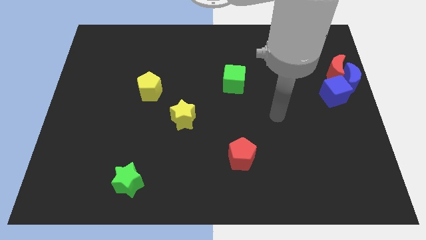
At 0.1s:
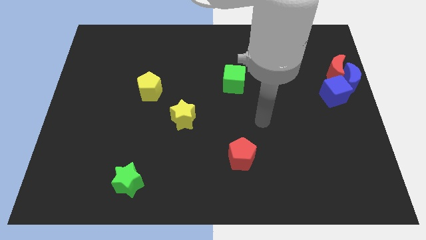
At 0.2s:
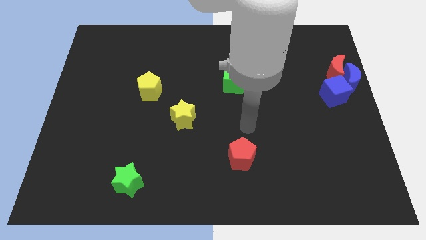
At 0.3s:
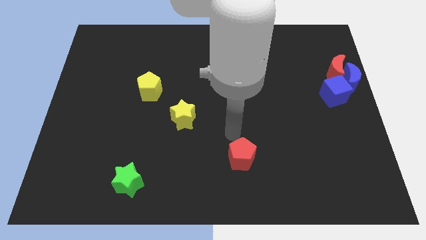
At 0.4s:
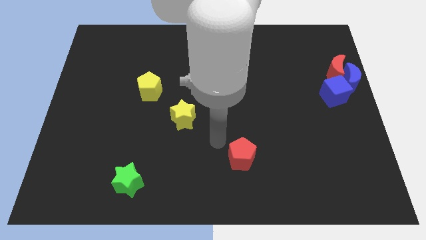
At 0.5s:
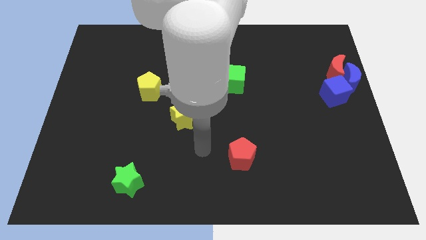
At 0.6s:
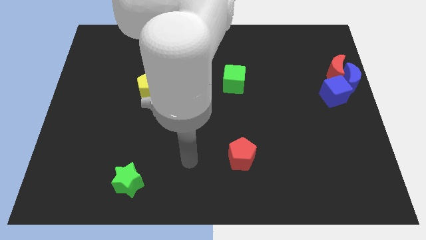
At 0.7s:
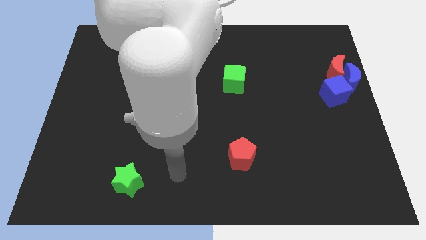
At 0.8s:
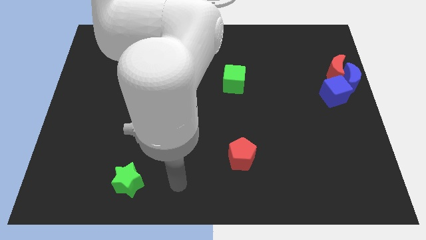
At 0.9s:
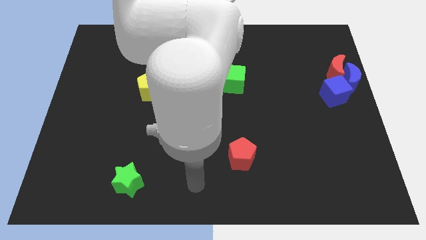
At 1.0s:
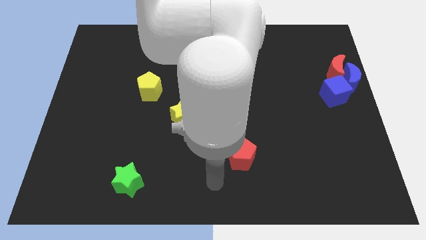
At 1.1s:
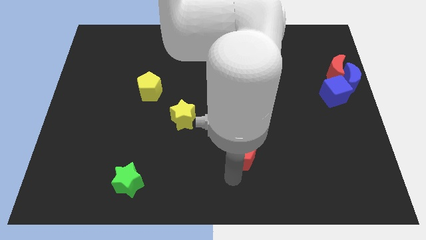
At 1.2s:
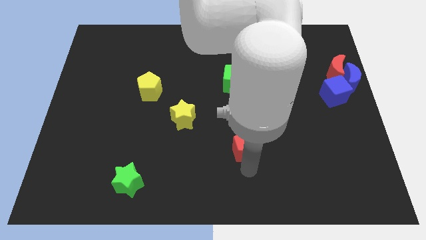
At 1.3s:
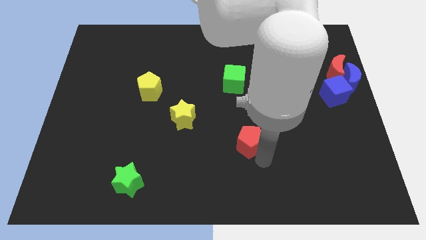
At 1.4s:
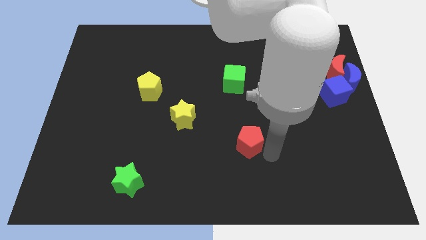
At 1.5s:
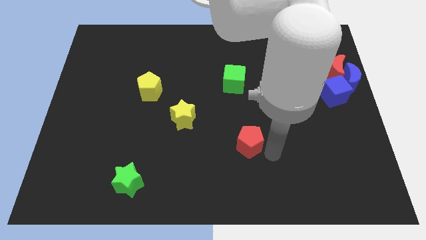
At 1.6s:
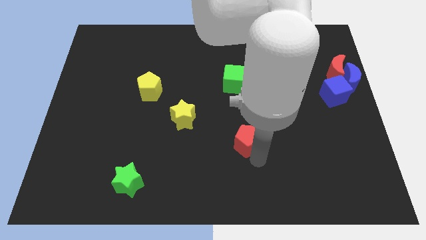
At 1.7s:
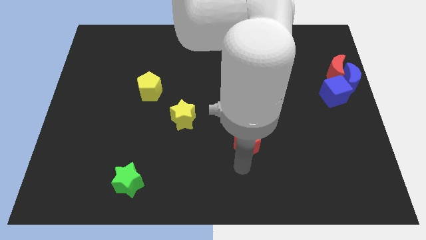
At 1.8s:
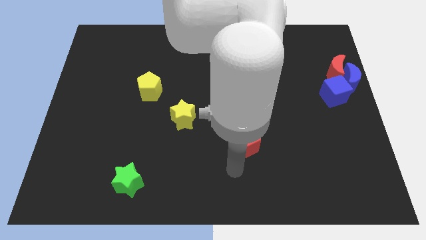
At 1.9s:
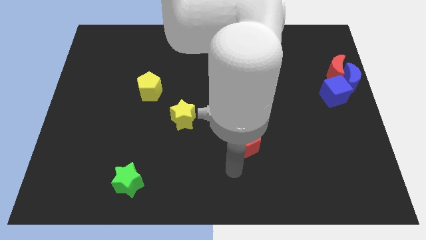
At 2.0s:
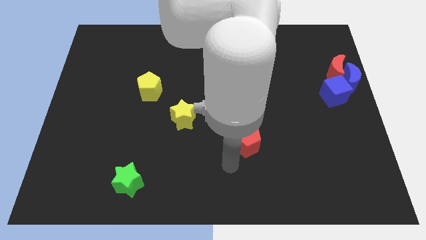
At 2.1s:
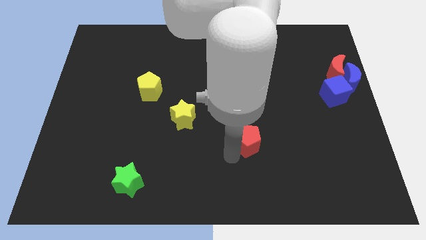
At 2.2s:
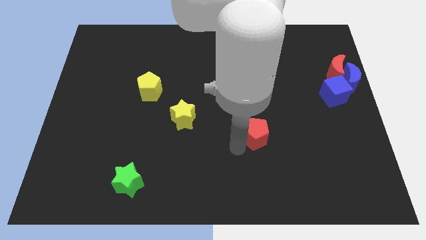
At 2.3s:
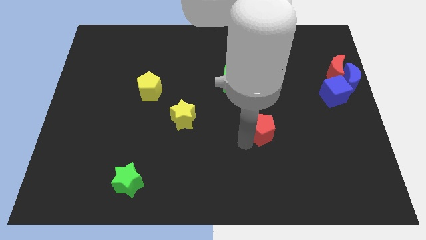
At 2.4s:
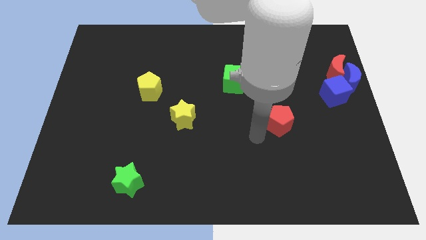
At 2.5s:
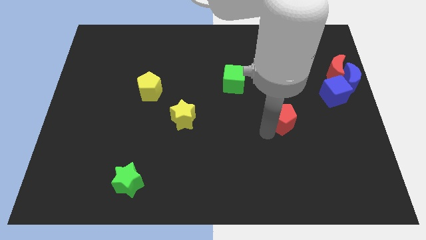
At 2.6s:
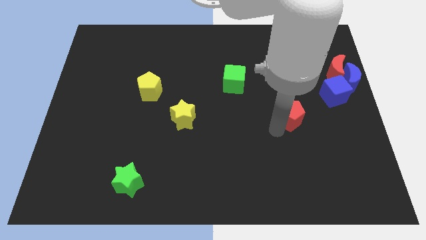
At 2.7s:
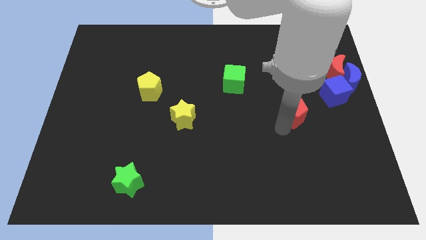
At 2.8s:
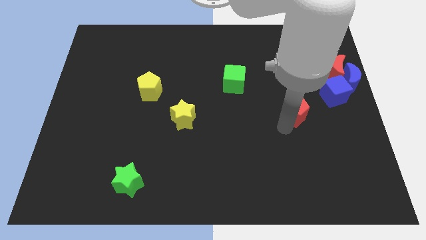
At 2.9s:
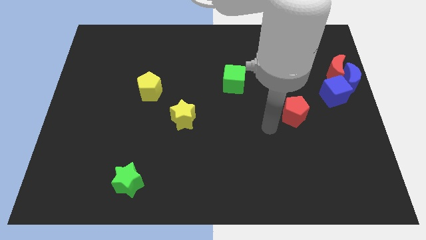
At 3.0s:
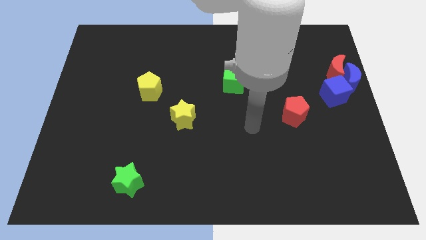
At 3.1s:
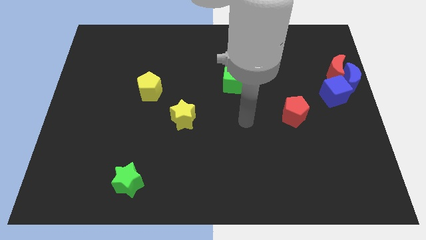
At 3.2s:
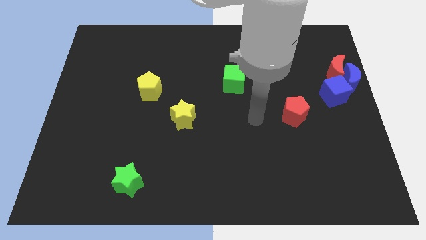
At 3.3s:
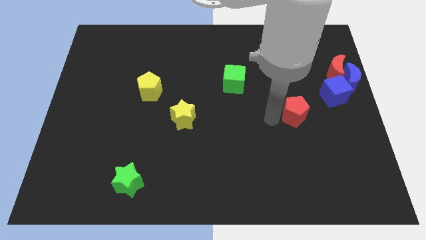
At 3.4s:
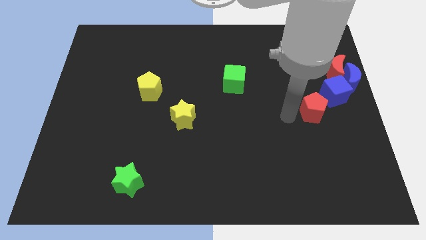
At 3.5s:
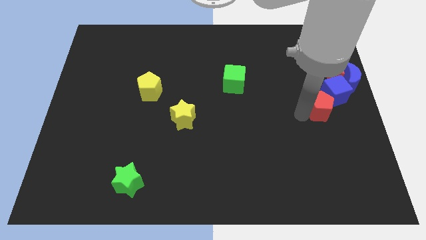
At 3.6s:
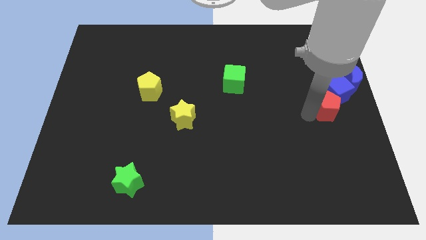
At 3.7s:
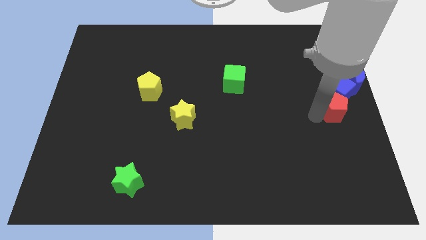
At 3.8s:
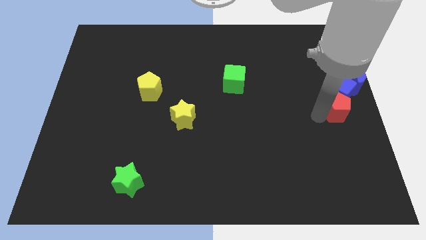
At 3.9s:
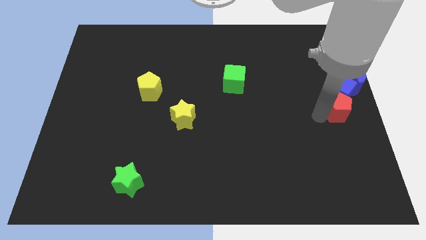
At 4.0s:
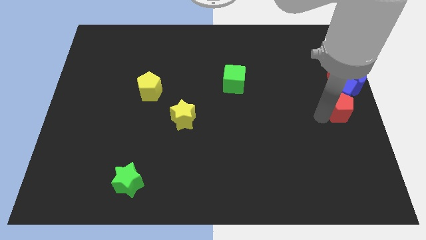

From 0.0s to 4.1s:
move the red pentagon to the bottom of the blue cube

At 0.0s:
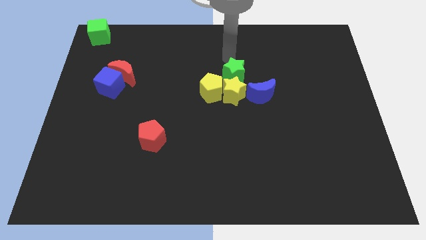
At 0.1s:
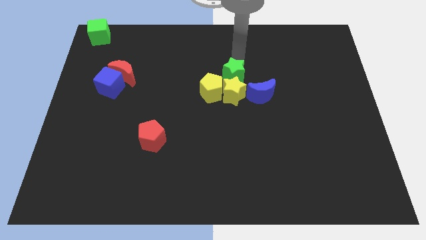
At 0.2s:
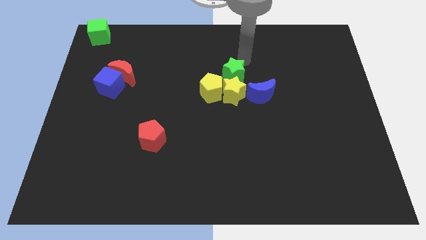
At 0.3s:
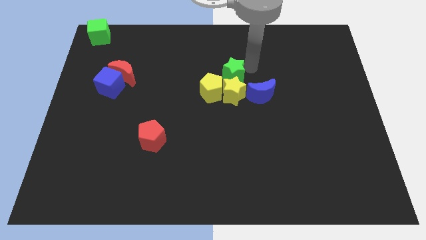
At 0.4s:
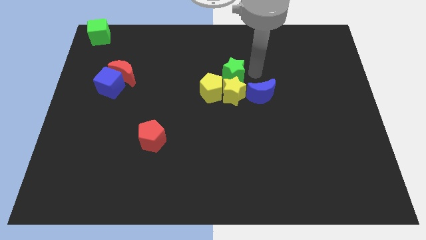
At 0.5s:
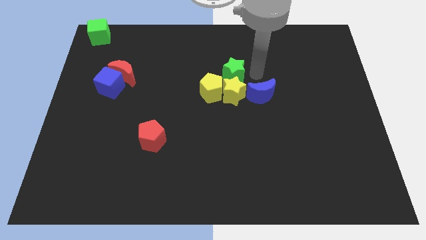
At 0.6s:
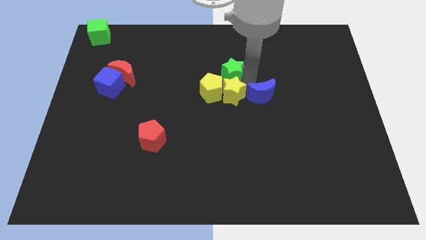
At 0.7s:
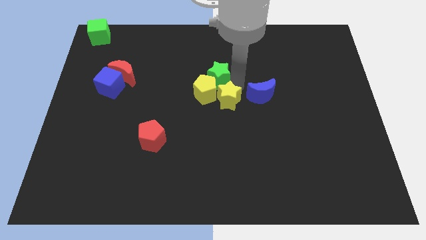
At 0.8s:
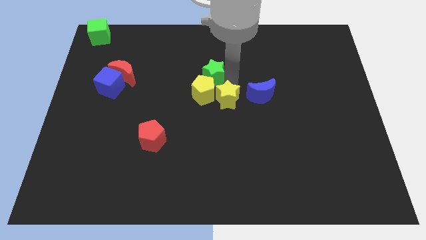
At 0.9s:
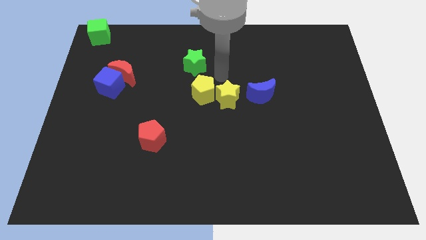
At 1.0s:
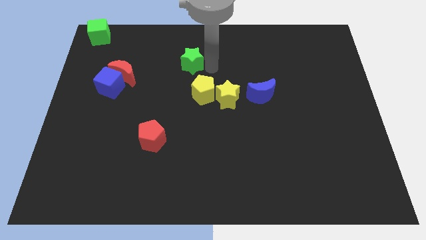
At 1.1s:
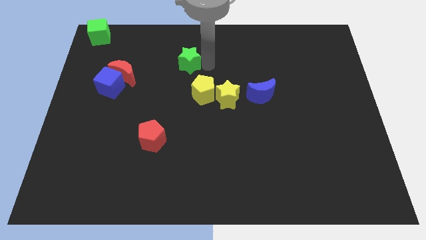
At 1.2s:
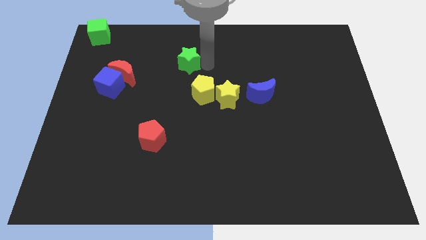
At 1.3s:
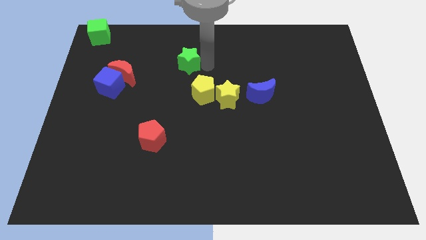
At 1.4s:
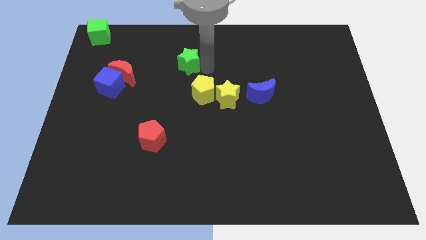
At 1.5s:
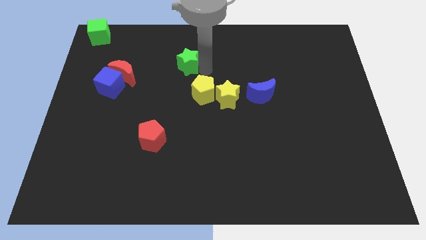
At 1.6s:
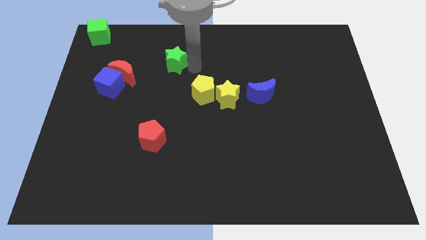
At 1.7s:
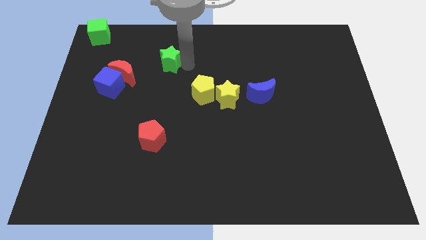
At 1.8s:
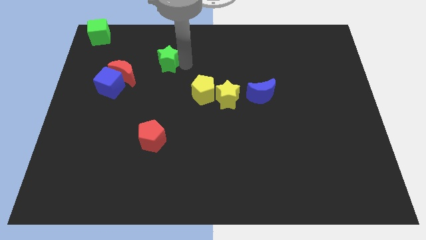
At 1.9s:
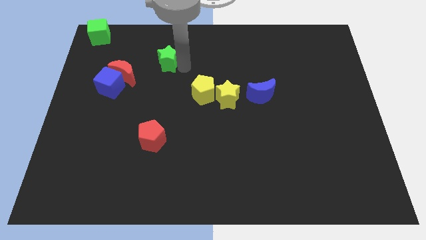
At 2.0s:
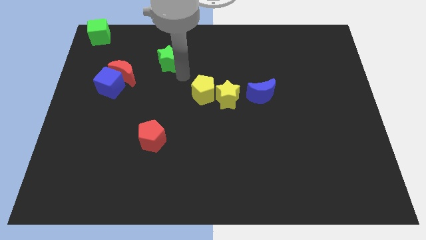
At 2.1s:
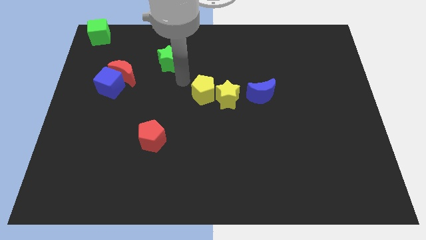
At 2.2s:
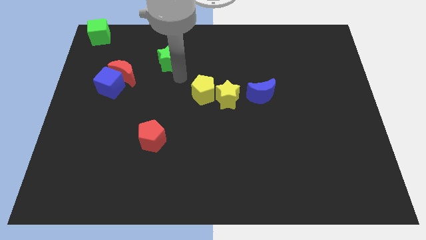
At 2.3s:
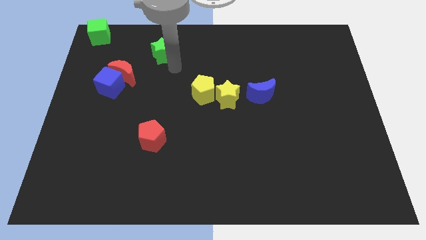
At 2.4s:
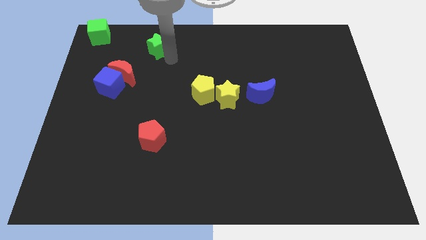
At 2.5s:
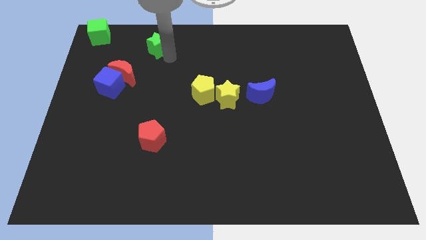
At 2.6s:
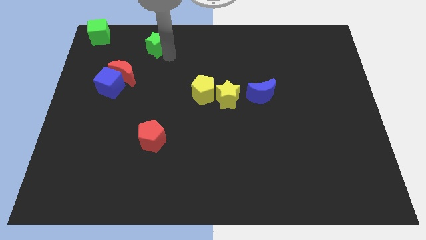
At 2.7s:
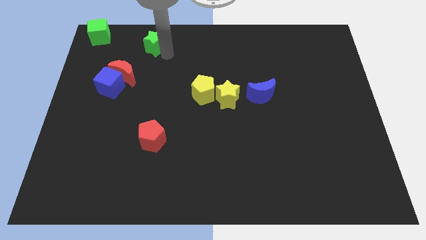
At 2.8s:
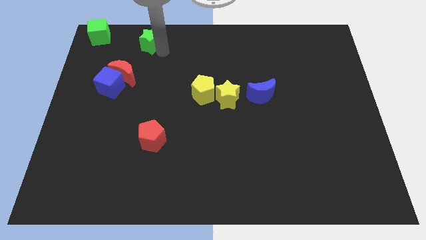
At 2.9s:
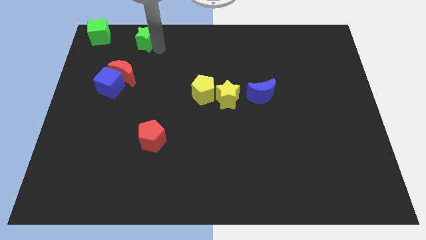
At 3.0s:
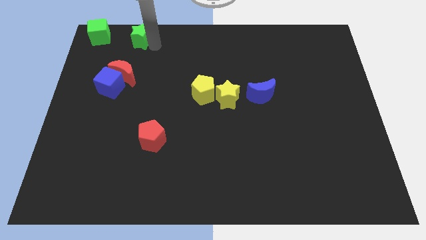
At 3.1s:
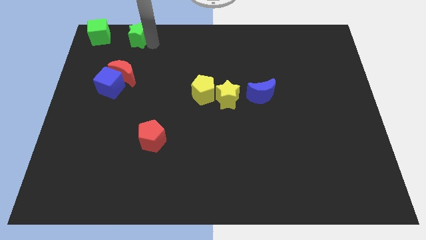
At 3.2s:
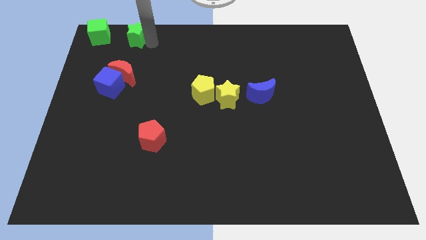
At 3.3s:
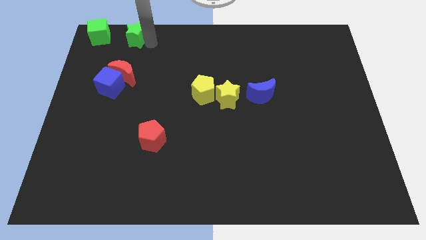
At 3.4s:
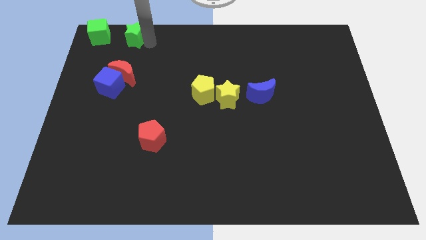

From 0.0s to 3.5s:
separate green star and yellow star

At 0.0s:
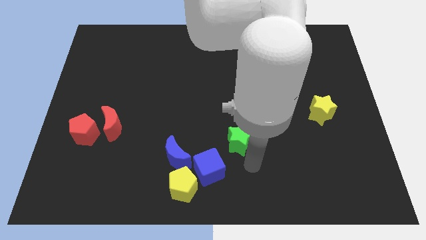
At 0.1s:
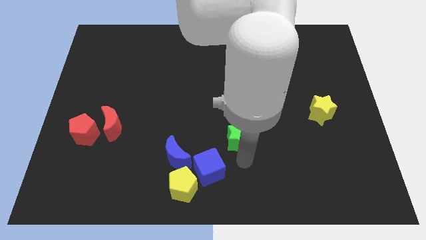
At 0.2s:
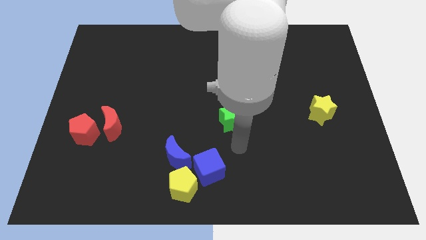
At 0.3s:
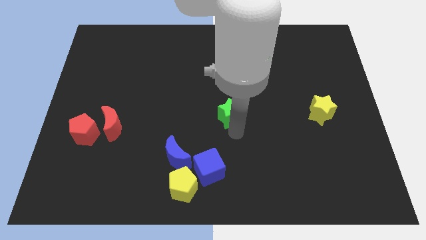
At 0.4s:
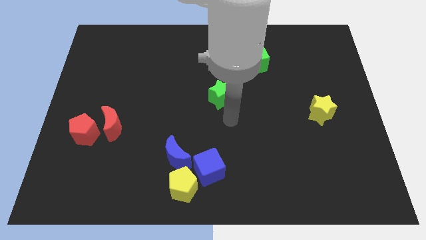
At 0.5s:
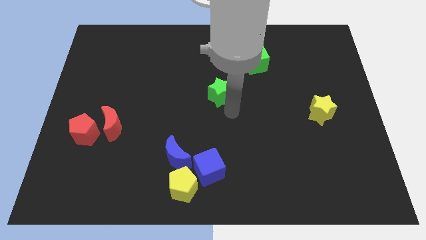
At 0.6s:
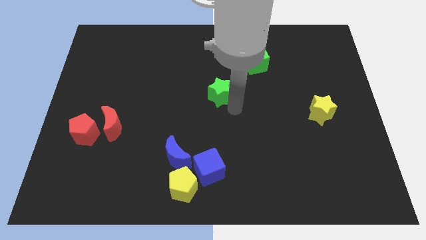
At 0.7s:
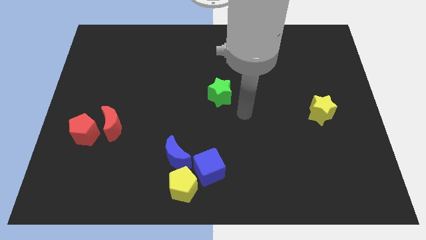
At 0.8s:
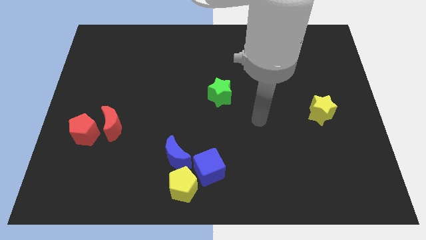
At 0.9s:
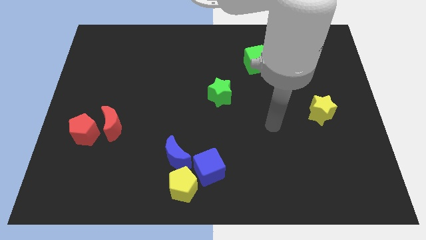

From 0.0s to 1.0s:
drag the green star to the top

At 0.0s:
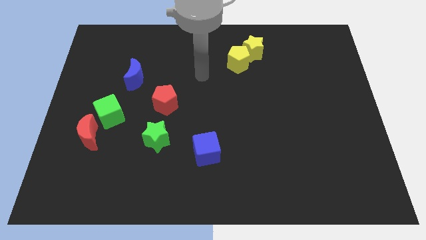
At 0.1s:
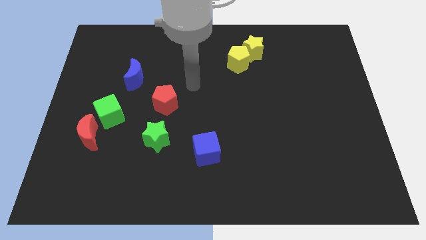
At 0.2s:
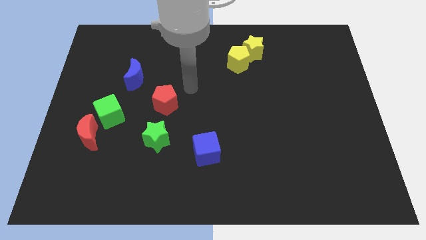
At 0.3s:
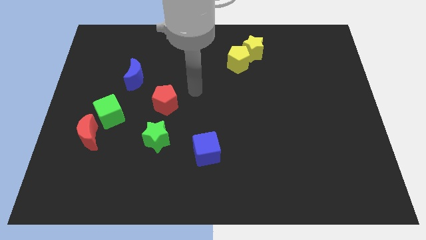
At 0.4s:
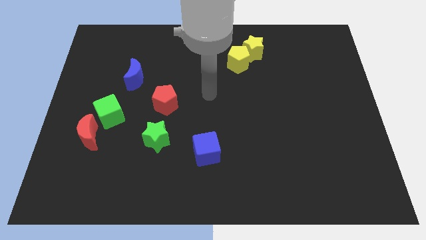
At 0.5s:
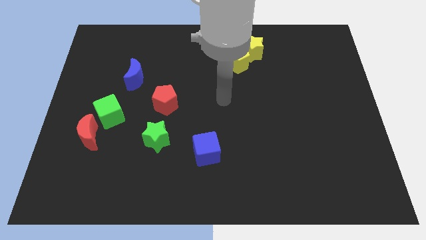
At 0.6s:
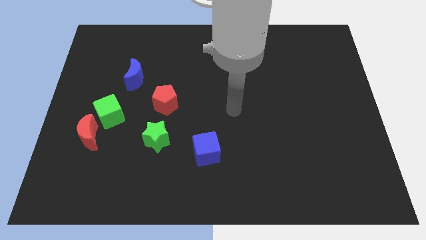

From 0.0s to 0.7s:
point your arm at the center of the board
